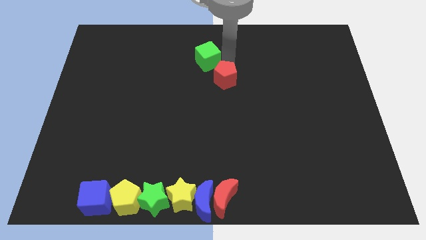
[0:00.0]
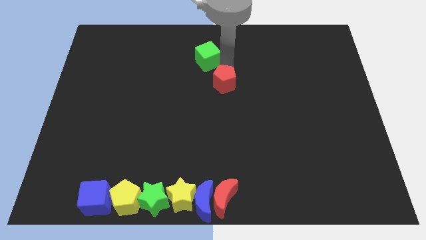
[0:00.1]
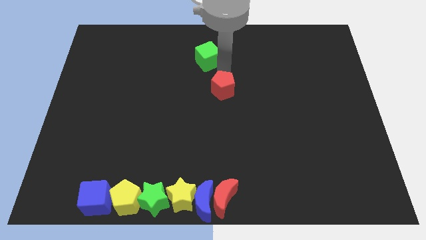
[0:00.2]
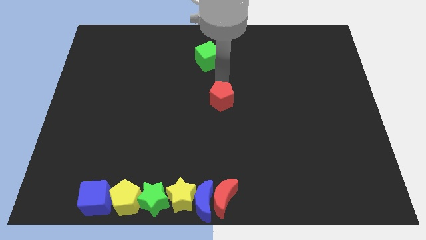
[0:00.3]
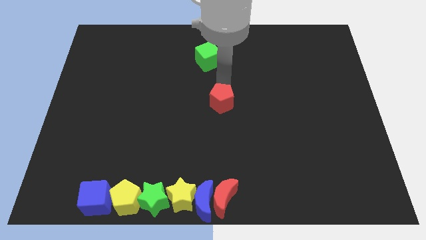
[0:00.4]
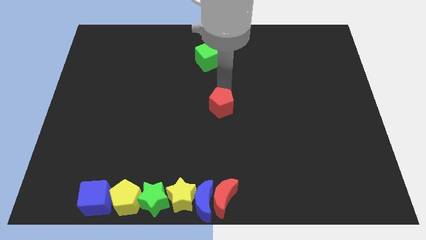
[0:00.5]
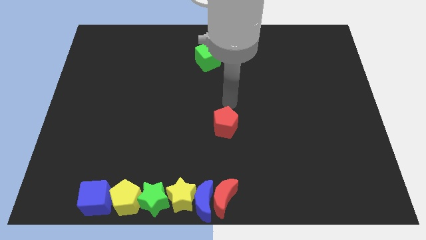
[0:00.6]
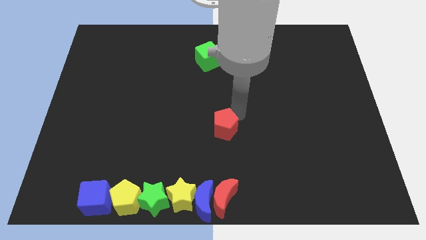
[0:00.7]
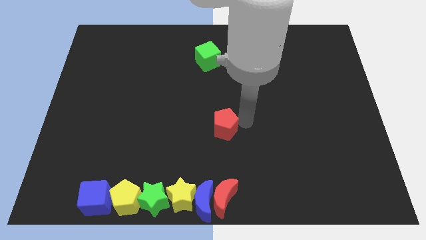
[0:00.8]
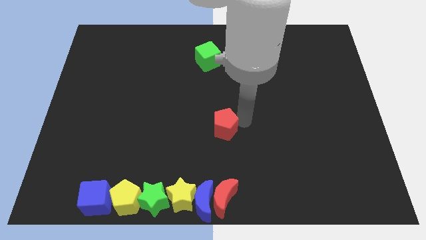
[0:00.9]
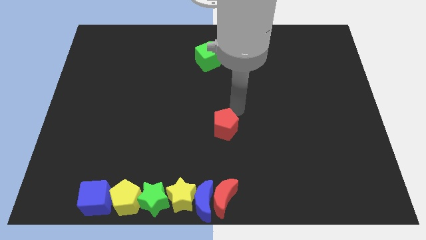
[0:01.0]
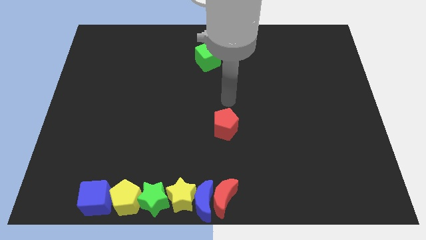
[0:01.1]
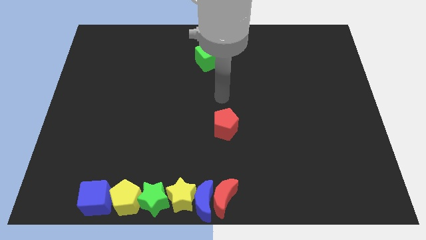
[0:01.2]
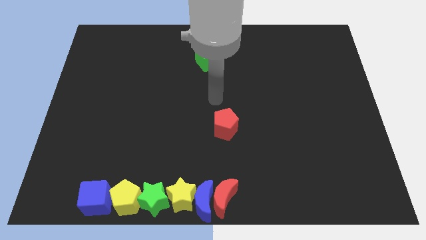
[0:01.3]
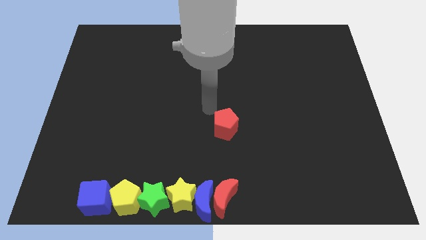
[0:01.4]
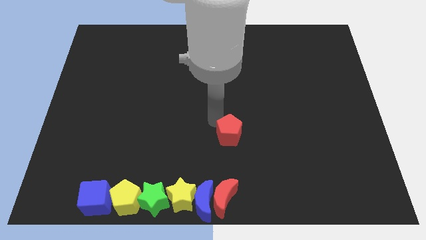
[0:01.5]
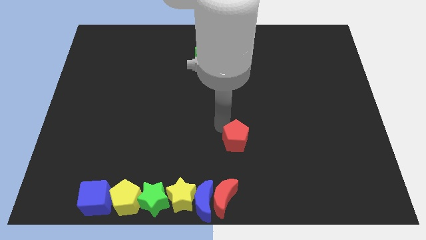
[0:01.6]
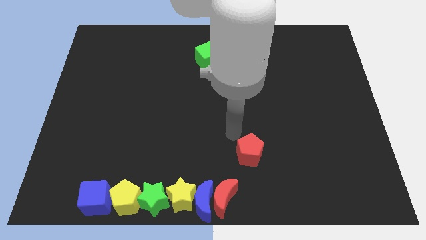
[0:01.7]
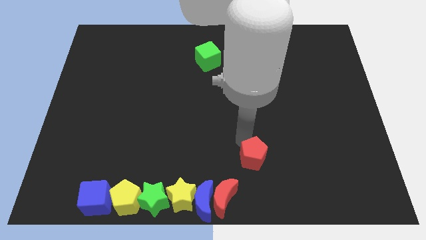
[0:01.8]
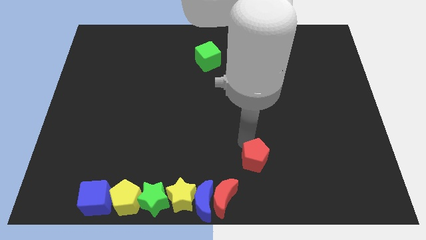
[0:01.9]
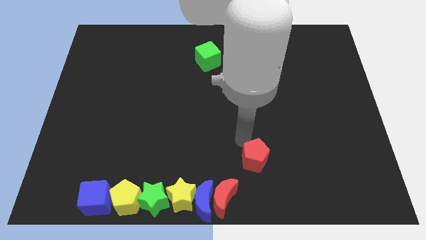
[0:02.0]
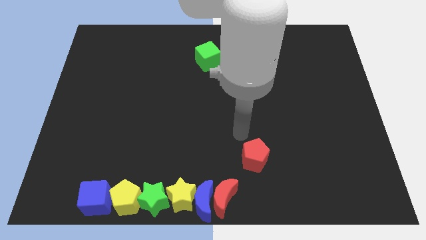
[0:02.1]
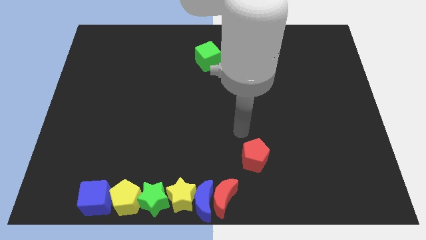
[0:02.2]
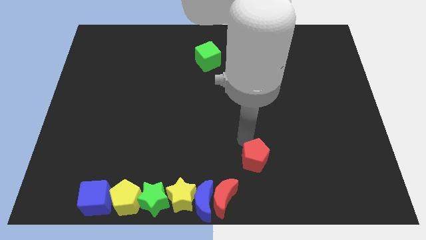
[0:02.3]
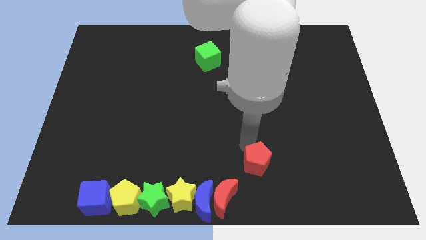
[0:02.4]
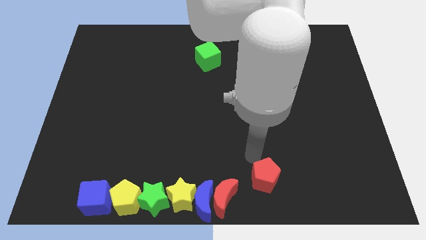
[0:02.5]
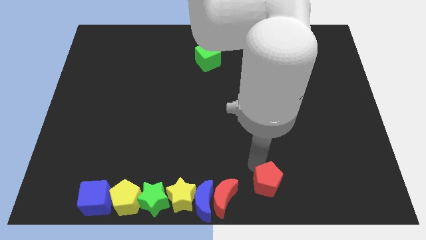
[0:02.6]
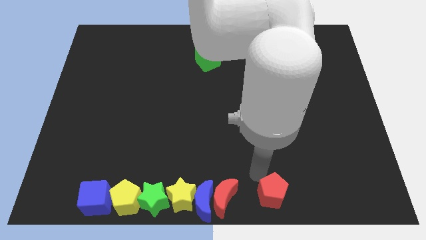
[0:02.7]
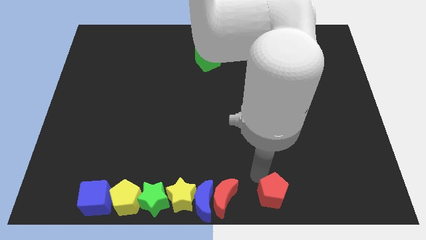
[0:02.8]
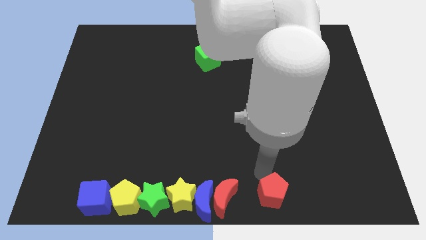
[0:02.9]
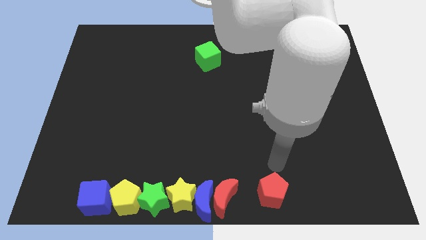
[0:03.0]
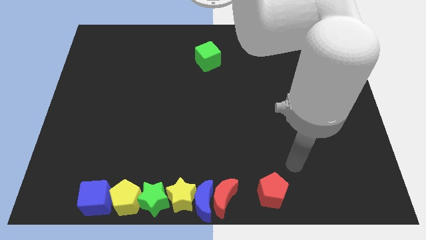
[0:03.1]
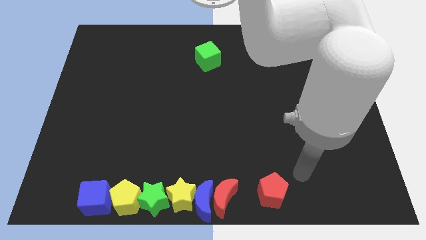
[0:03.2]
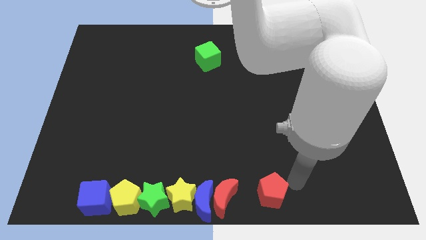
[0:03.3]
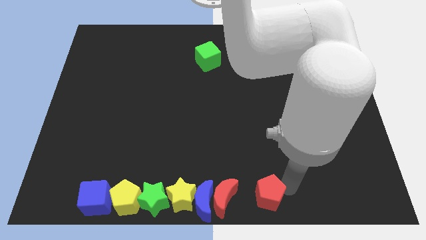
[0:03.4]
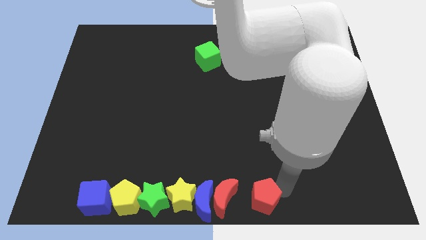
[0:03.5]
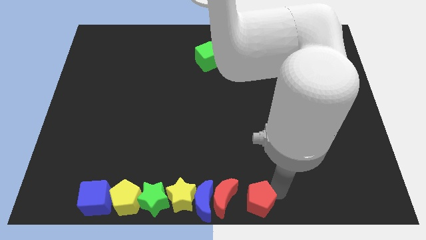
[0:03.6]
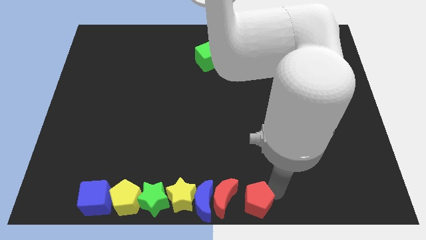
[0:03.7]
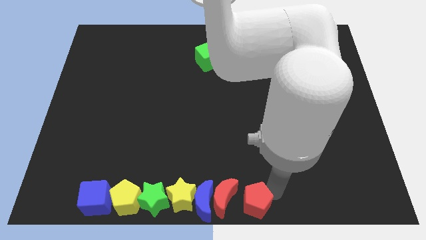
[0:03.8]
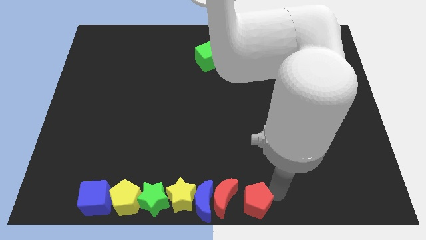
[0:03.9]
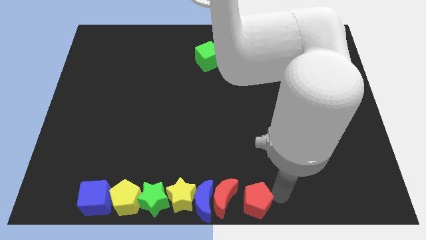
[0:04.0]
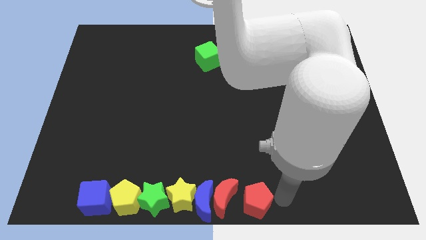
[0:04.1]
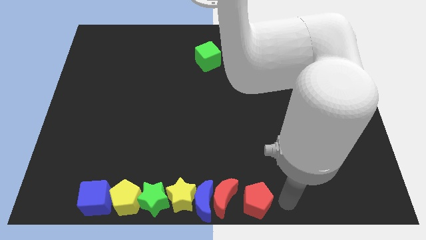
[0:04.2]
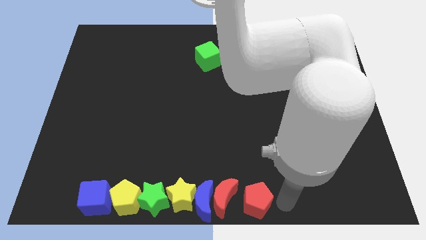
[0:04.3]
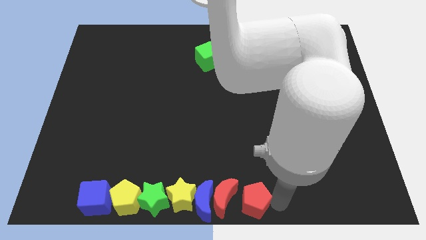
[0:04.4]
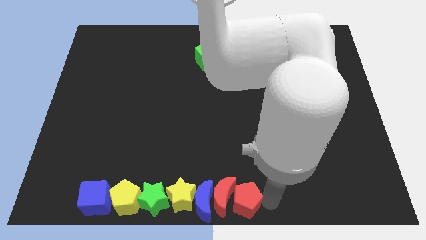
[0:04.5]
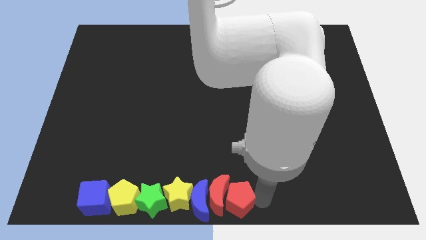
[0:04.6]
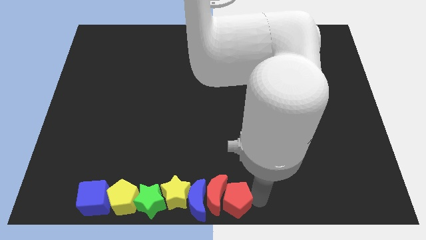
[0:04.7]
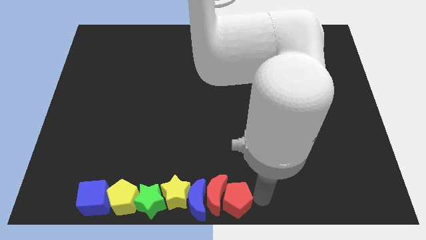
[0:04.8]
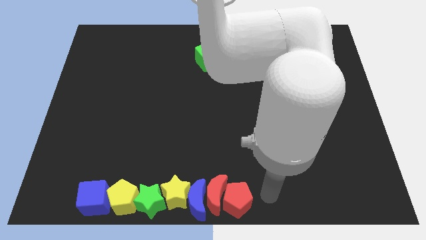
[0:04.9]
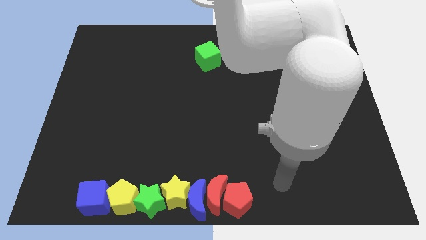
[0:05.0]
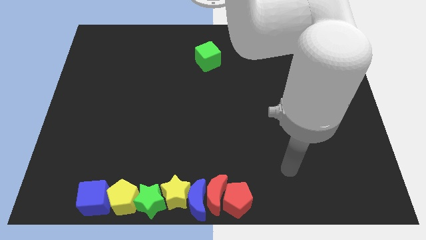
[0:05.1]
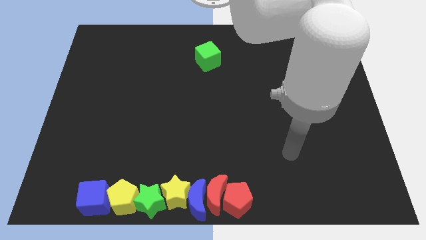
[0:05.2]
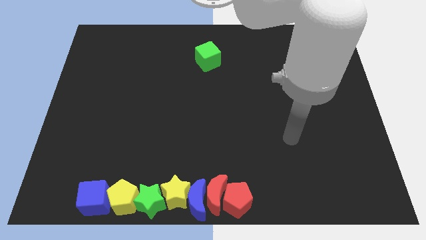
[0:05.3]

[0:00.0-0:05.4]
push the red pentagon into the red crescent

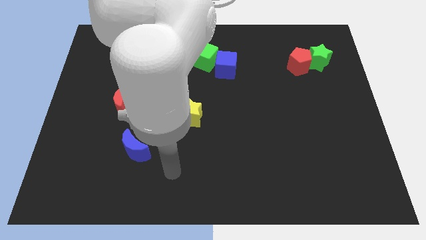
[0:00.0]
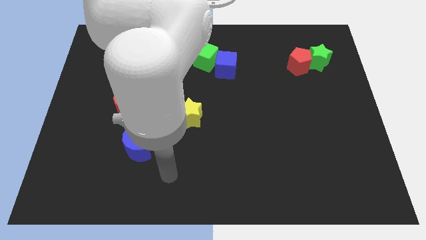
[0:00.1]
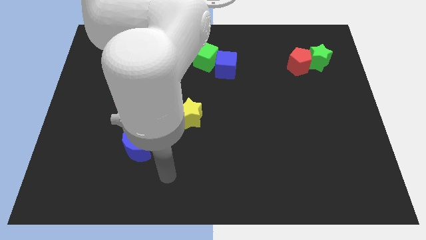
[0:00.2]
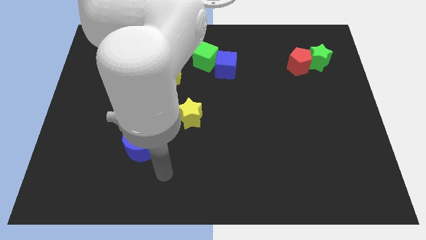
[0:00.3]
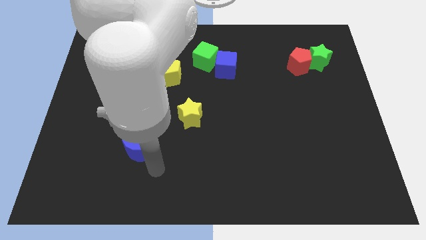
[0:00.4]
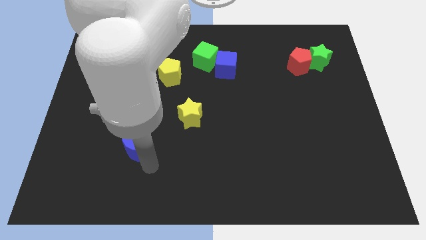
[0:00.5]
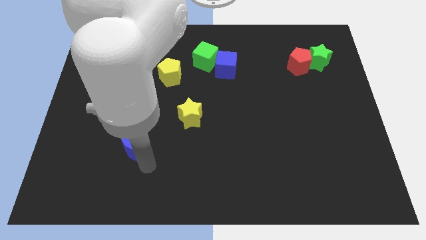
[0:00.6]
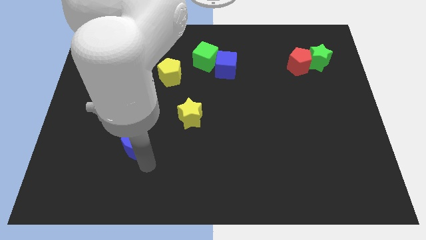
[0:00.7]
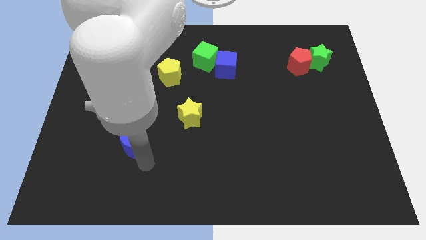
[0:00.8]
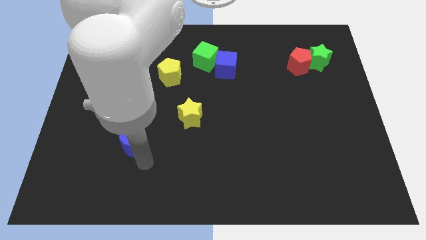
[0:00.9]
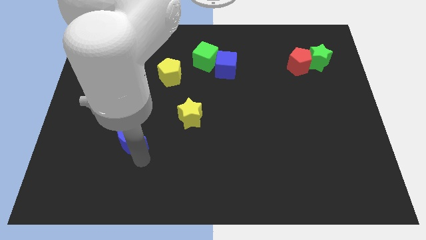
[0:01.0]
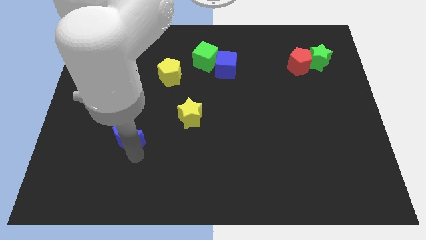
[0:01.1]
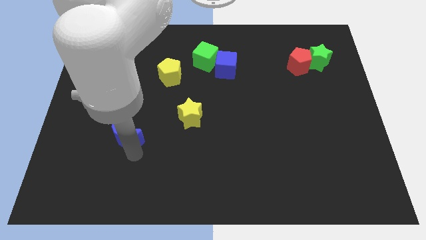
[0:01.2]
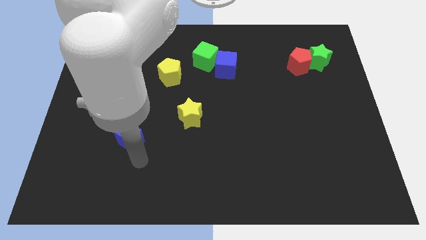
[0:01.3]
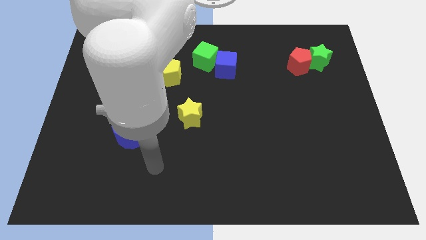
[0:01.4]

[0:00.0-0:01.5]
place the blue crescent bottom of the red moon

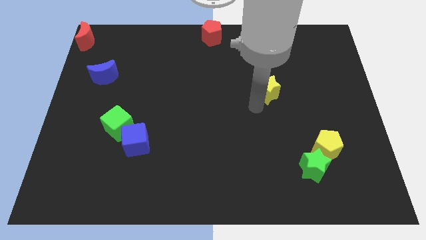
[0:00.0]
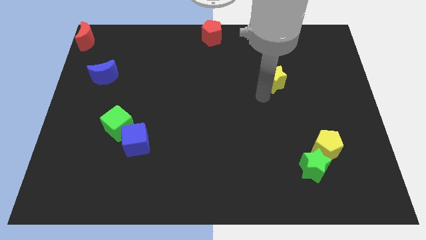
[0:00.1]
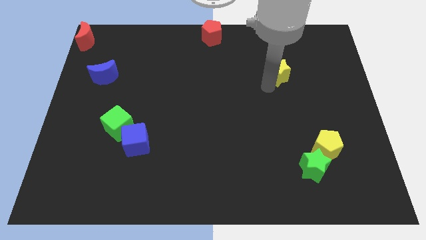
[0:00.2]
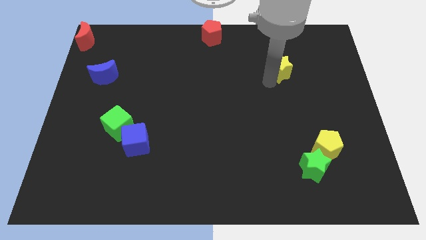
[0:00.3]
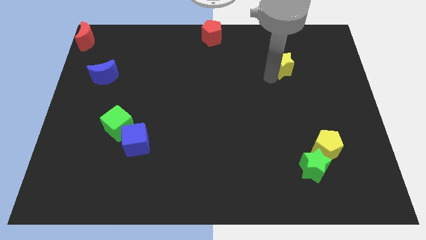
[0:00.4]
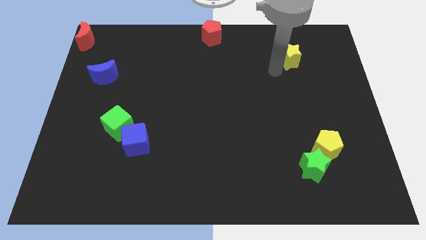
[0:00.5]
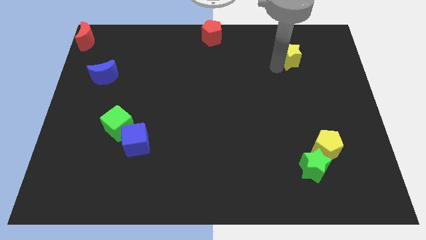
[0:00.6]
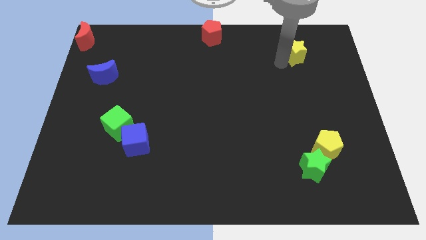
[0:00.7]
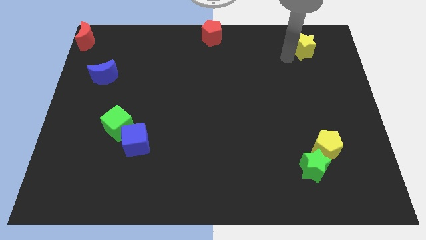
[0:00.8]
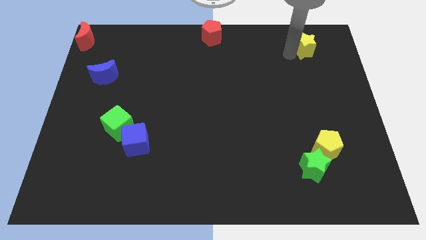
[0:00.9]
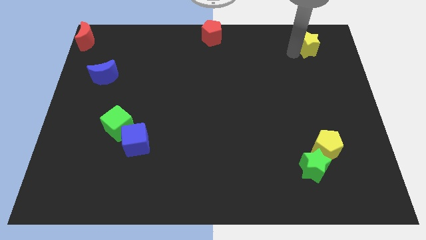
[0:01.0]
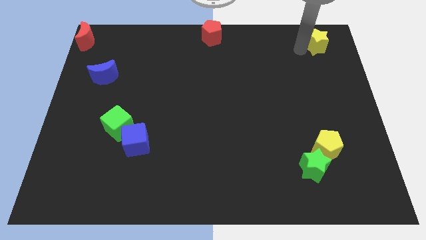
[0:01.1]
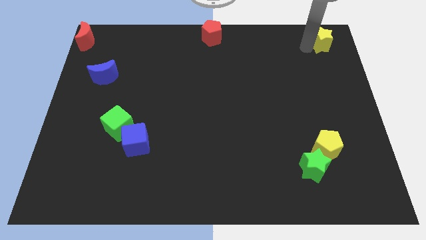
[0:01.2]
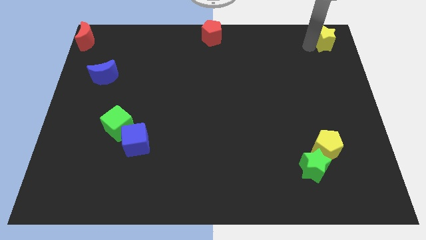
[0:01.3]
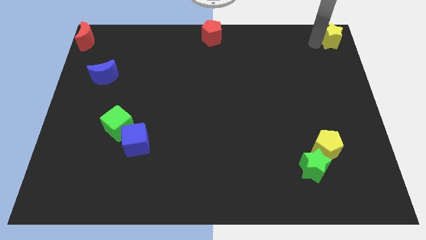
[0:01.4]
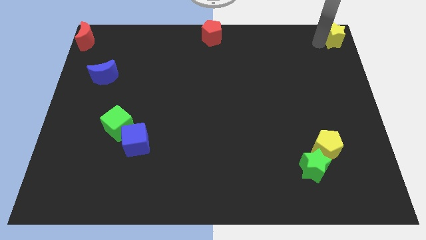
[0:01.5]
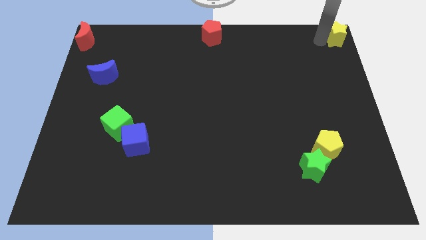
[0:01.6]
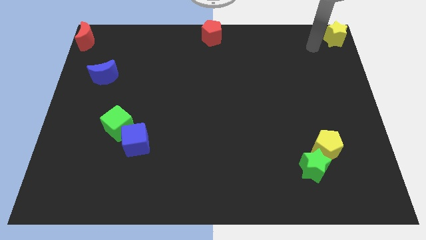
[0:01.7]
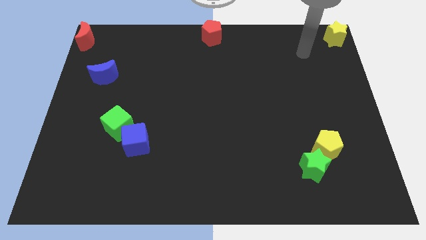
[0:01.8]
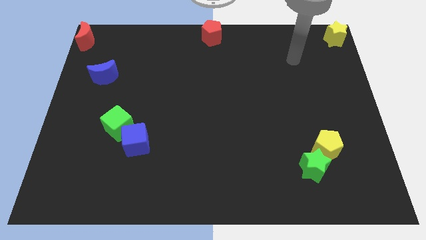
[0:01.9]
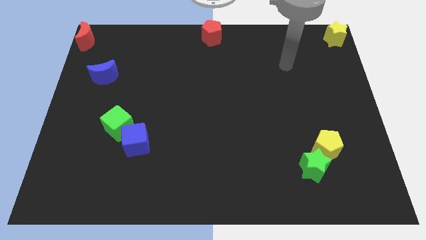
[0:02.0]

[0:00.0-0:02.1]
push yellow star to the top right
